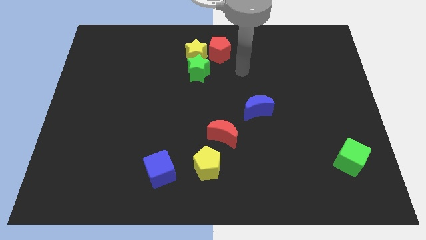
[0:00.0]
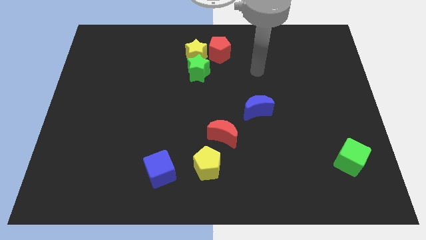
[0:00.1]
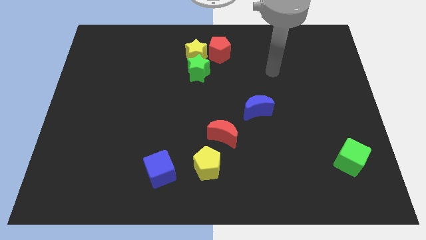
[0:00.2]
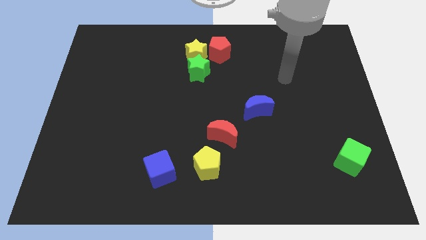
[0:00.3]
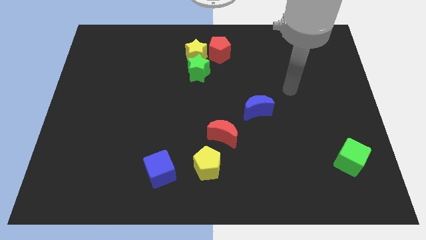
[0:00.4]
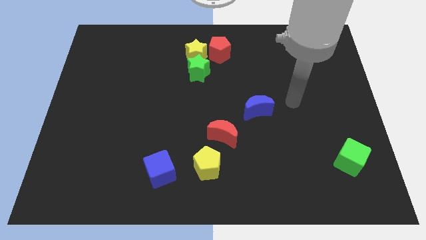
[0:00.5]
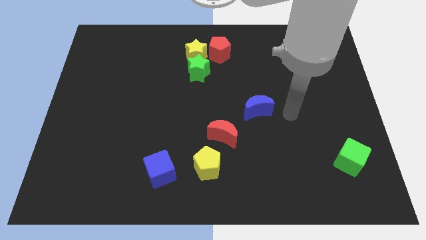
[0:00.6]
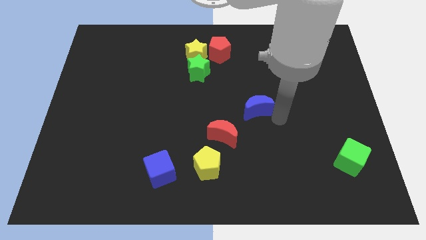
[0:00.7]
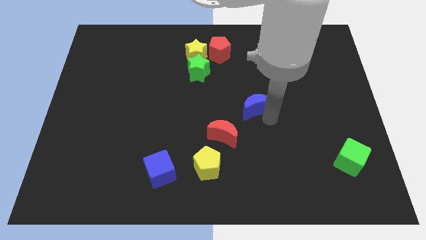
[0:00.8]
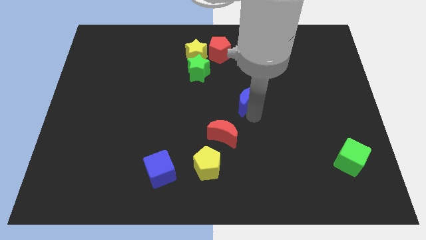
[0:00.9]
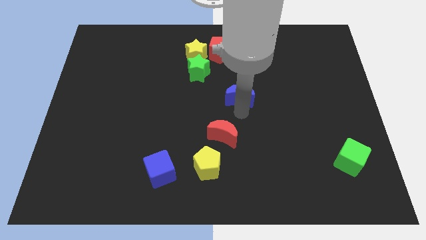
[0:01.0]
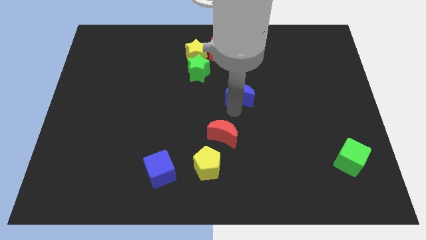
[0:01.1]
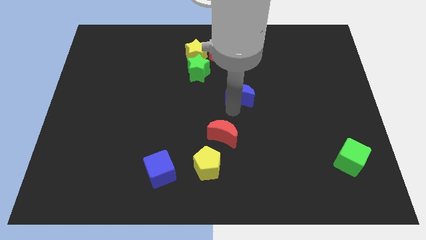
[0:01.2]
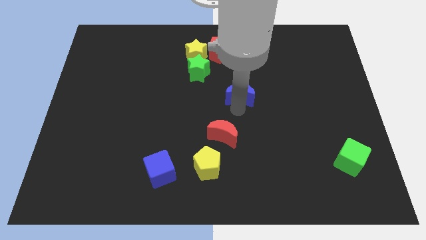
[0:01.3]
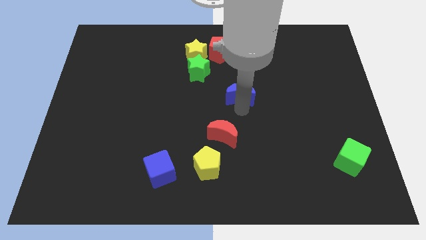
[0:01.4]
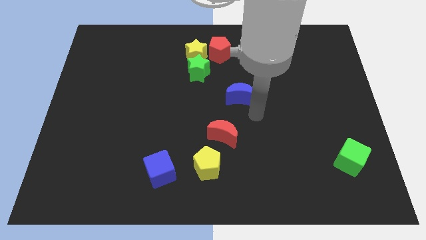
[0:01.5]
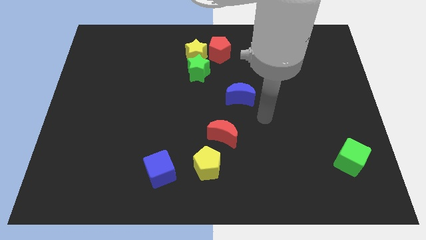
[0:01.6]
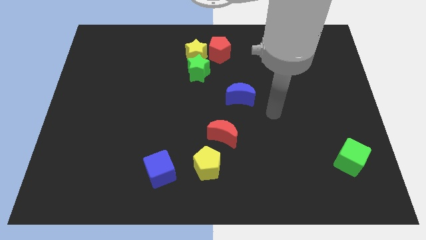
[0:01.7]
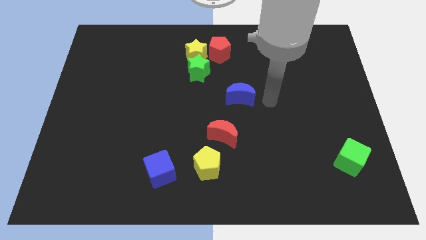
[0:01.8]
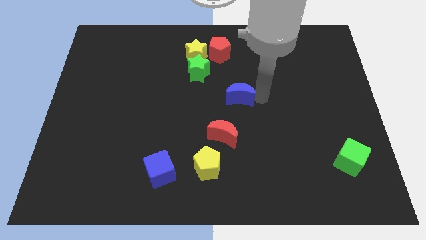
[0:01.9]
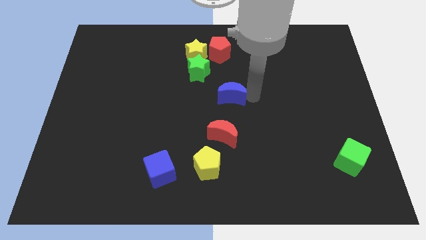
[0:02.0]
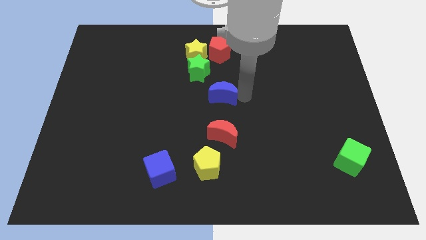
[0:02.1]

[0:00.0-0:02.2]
push the blue moon to left side

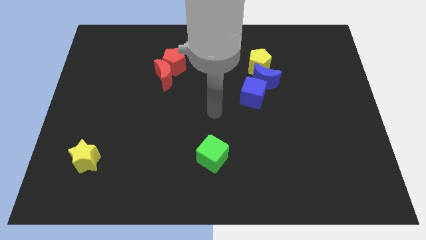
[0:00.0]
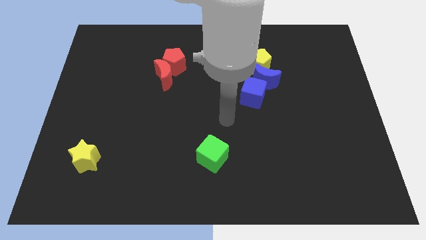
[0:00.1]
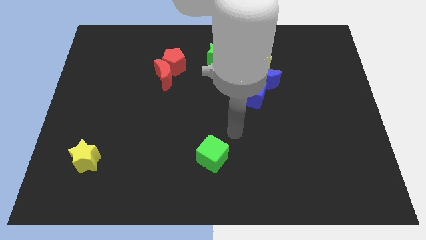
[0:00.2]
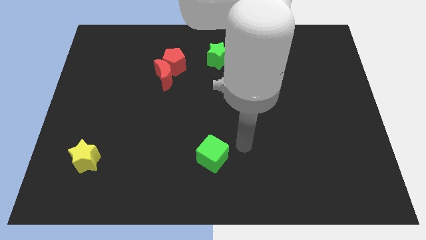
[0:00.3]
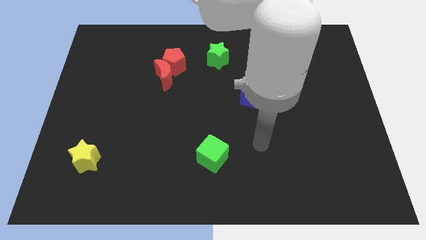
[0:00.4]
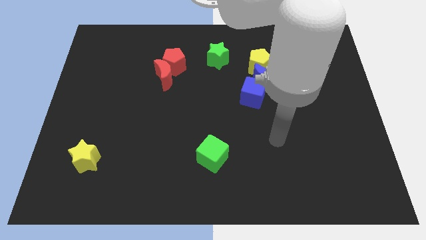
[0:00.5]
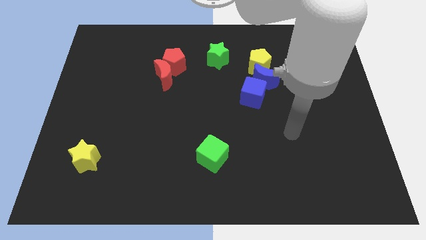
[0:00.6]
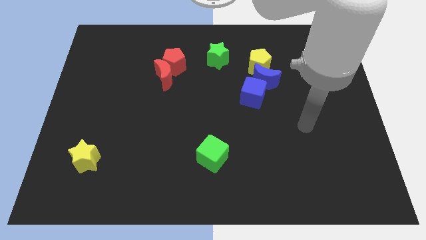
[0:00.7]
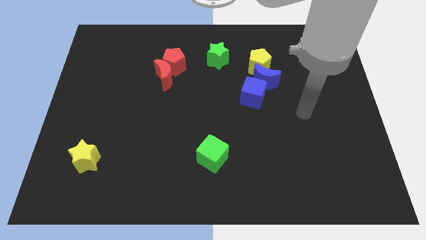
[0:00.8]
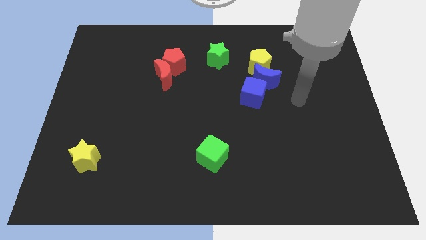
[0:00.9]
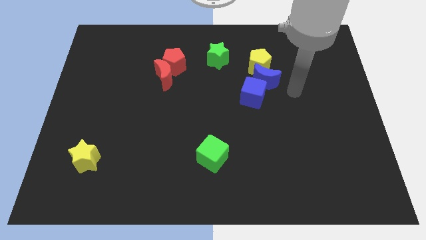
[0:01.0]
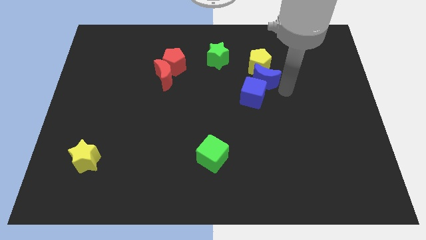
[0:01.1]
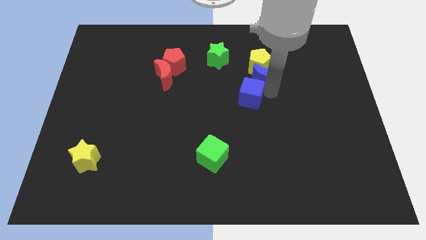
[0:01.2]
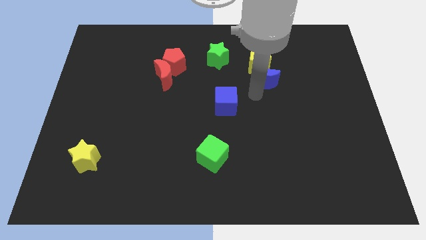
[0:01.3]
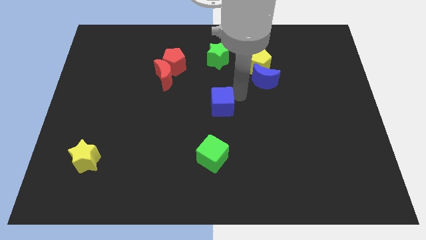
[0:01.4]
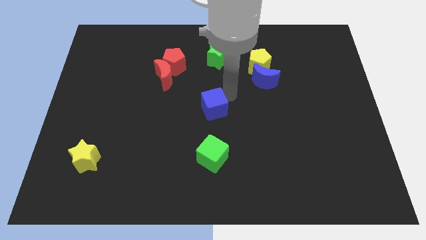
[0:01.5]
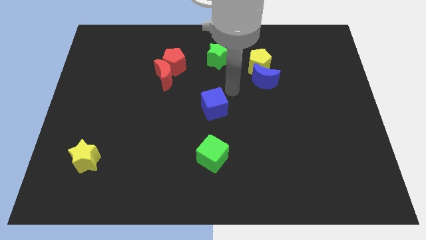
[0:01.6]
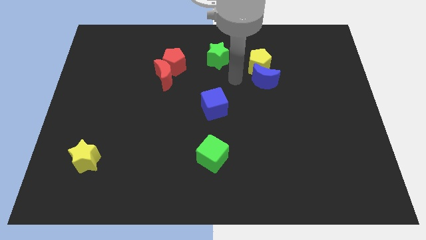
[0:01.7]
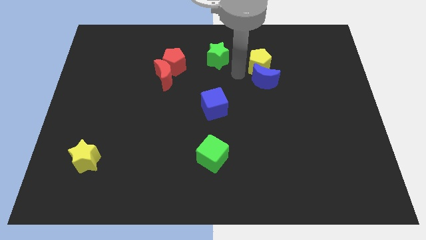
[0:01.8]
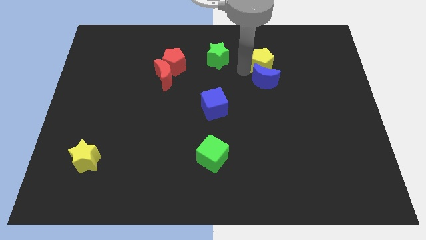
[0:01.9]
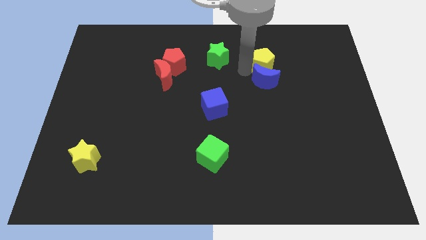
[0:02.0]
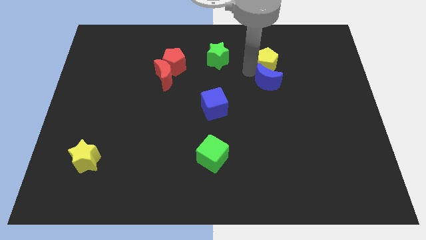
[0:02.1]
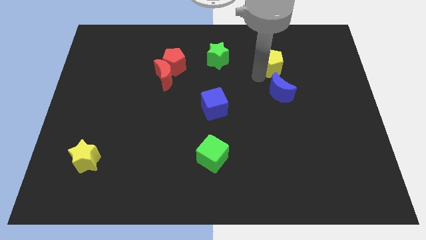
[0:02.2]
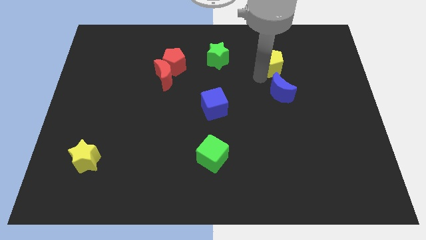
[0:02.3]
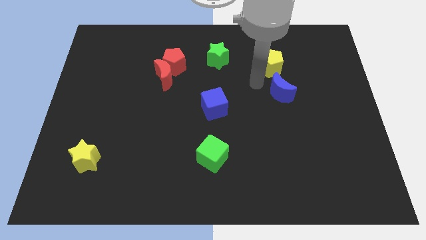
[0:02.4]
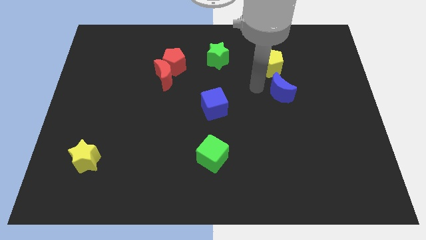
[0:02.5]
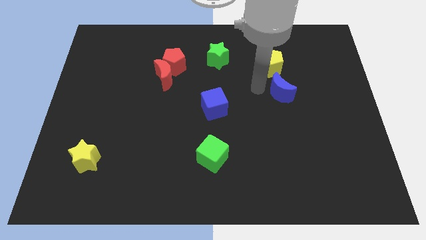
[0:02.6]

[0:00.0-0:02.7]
move the blue cube above to the green cube

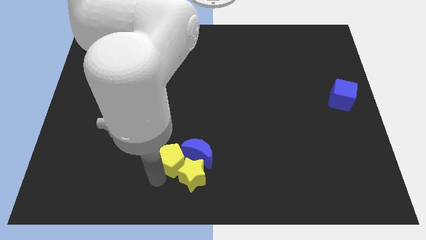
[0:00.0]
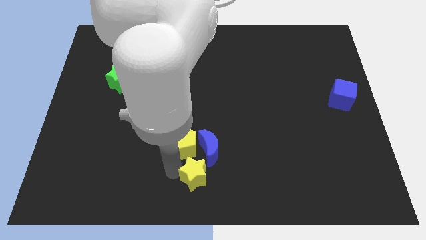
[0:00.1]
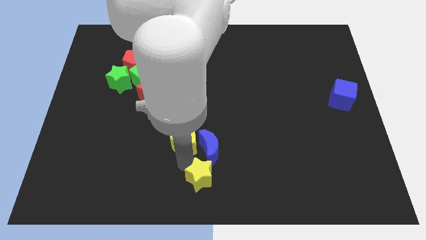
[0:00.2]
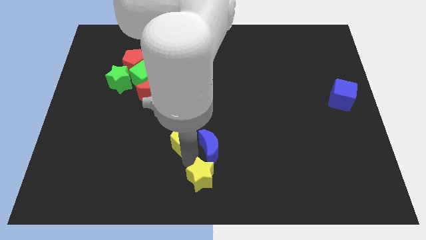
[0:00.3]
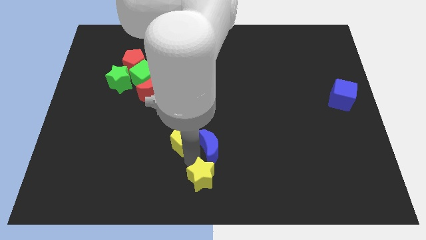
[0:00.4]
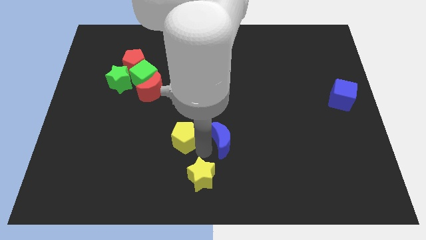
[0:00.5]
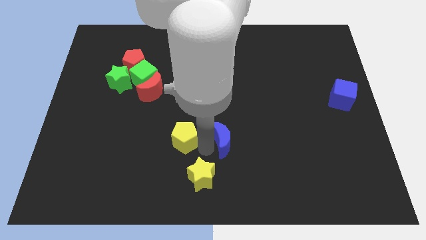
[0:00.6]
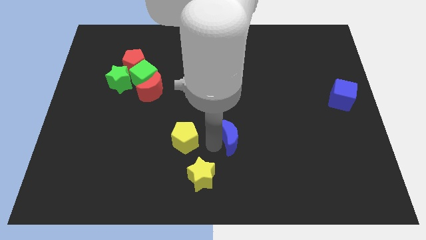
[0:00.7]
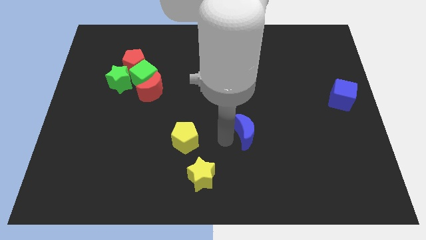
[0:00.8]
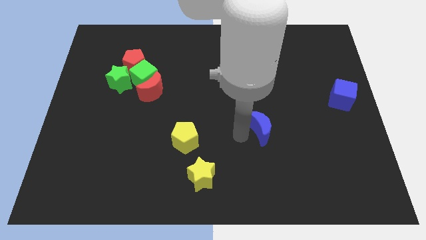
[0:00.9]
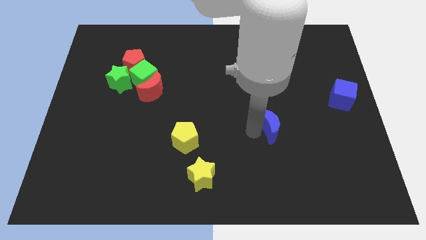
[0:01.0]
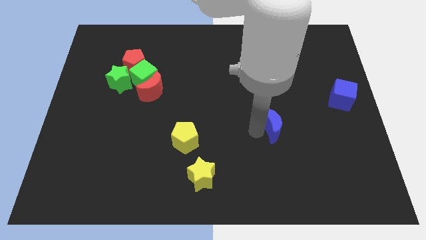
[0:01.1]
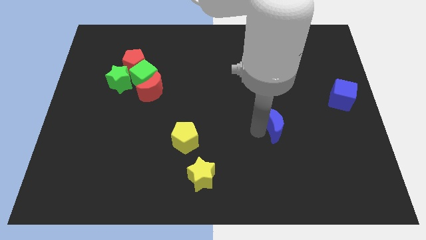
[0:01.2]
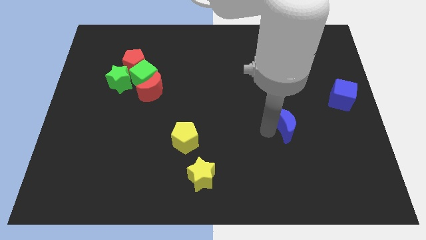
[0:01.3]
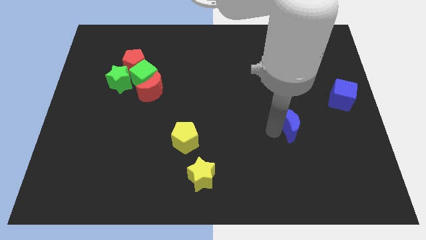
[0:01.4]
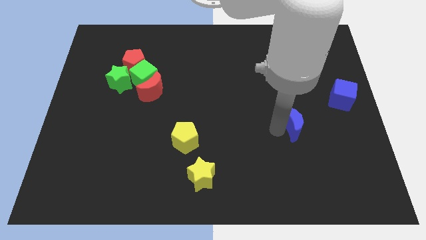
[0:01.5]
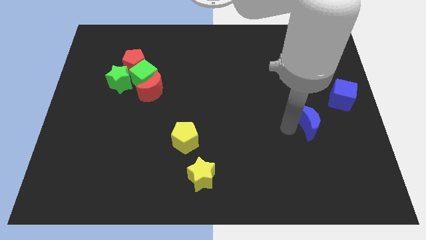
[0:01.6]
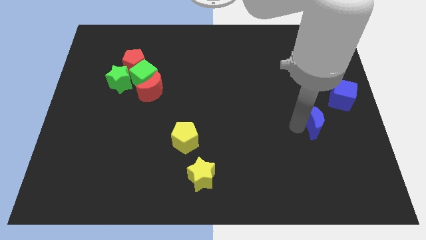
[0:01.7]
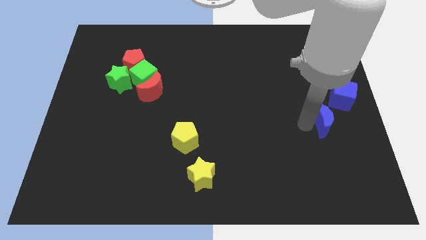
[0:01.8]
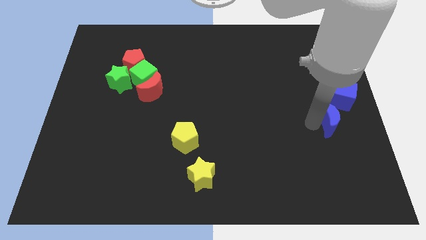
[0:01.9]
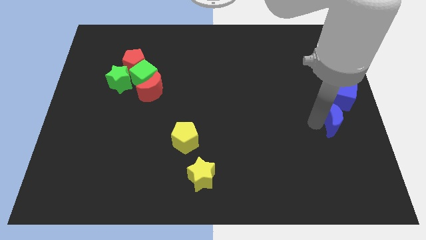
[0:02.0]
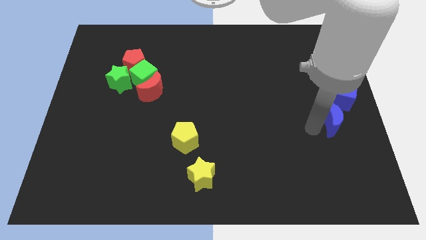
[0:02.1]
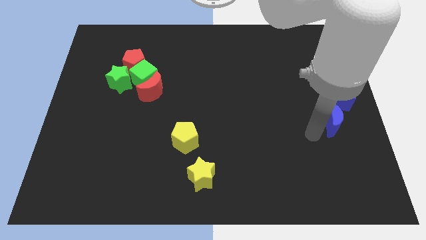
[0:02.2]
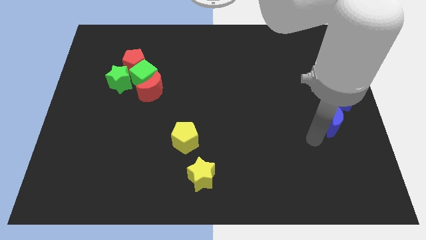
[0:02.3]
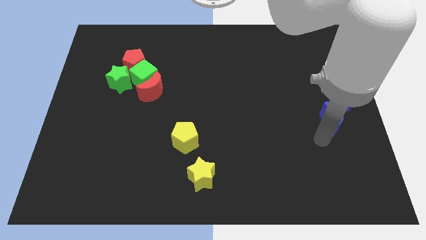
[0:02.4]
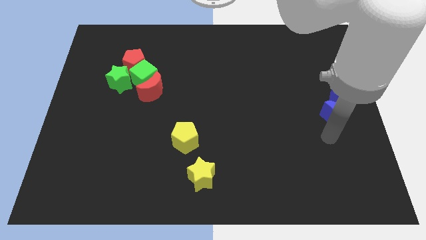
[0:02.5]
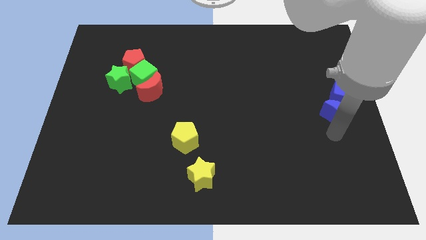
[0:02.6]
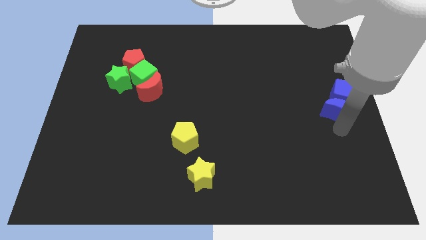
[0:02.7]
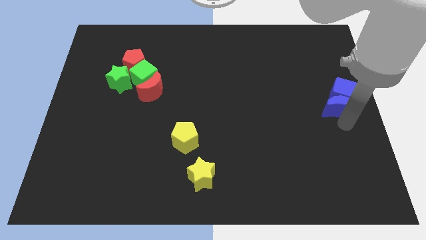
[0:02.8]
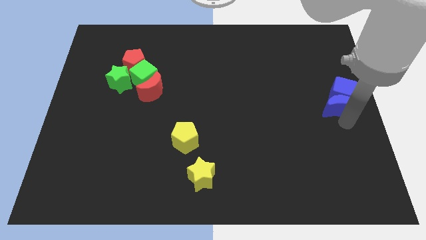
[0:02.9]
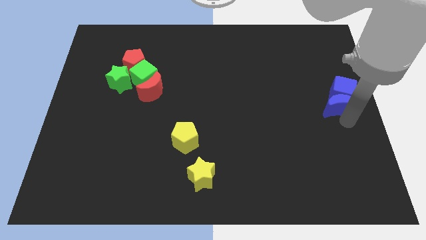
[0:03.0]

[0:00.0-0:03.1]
push blue crescent below blue cube

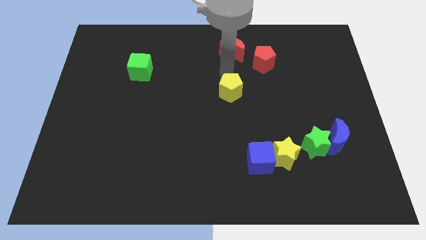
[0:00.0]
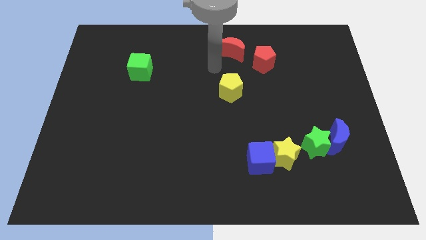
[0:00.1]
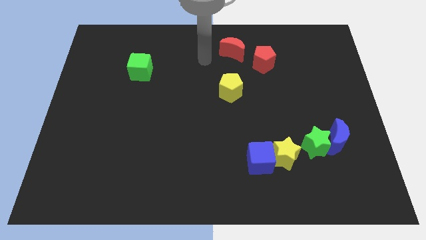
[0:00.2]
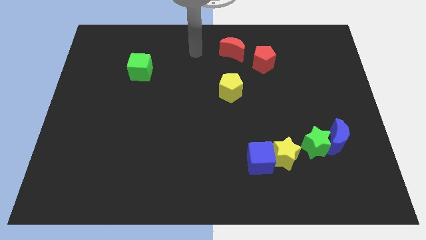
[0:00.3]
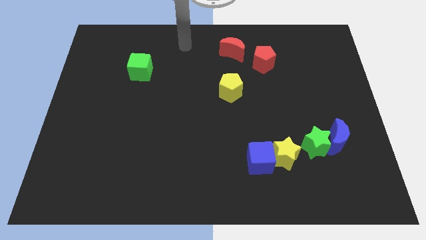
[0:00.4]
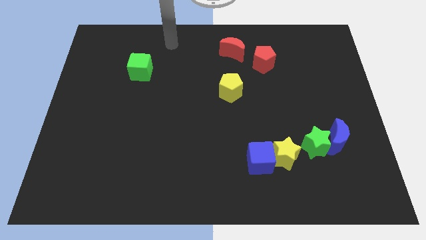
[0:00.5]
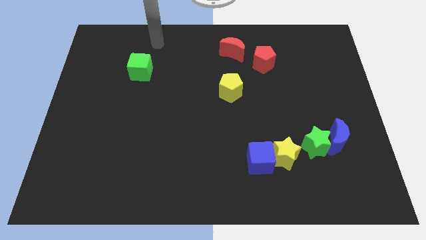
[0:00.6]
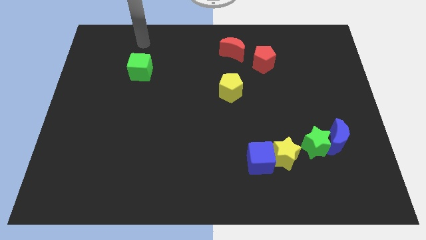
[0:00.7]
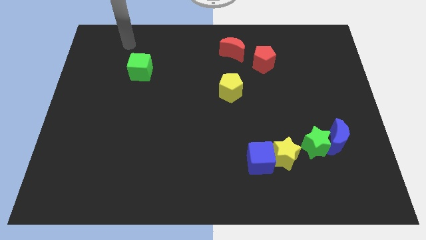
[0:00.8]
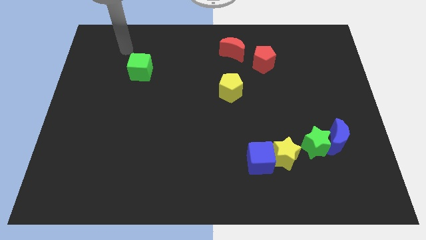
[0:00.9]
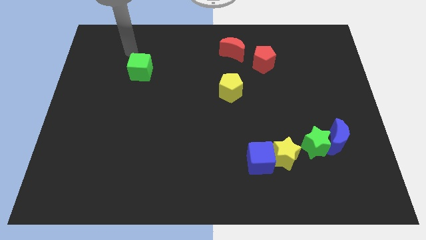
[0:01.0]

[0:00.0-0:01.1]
point your arm at the top of the green cube

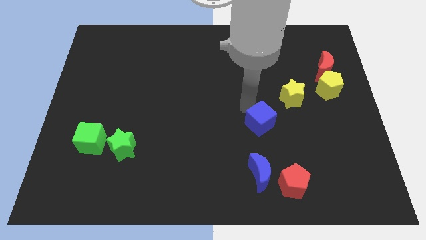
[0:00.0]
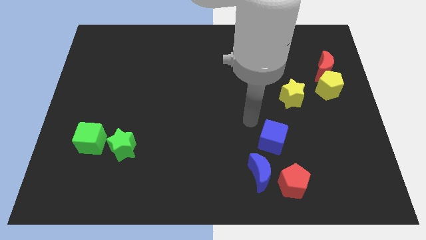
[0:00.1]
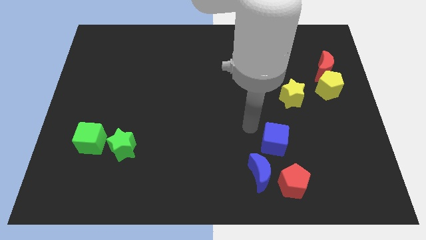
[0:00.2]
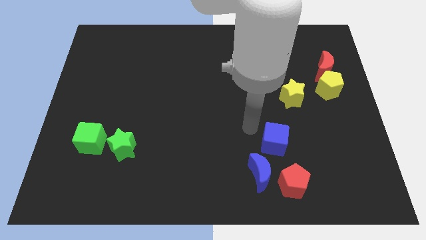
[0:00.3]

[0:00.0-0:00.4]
move the blue cube close to the blue moon
